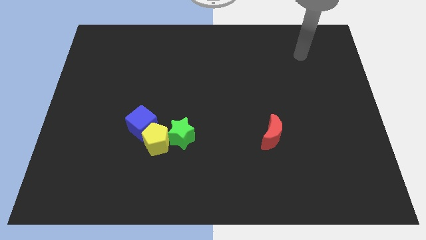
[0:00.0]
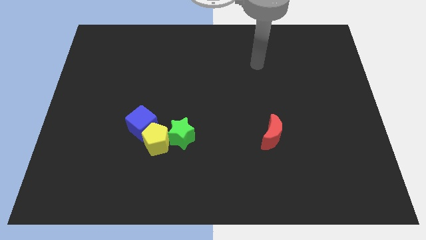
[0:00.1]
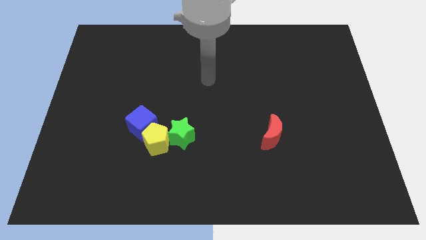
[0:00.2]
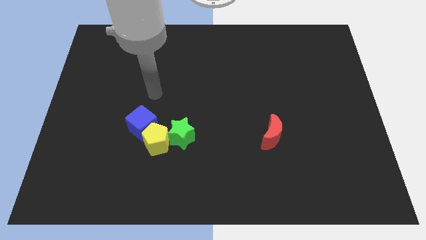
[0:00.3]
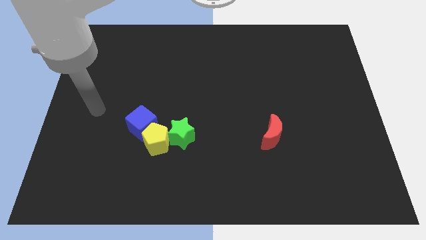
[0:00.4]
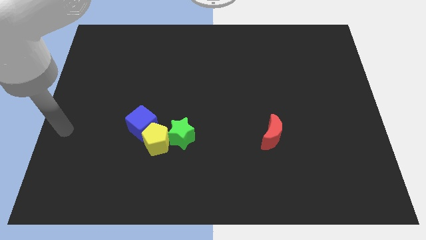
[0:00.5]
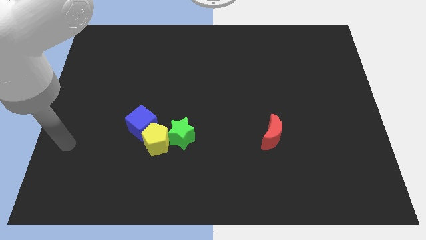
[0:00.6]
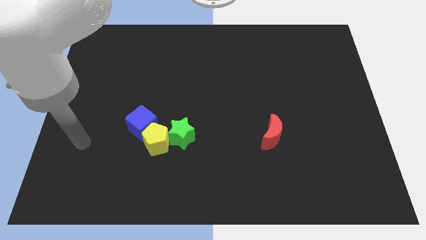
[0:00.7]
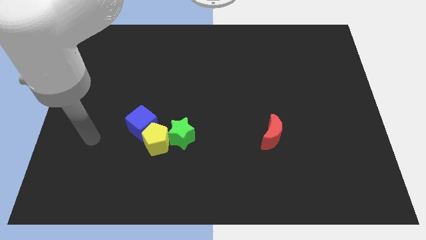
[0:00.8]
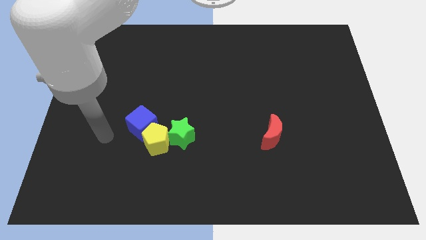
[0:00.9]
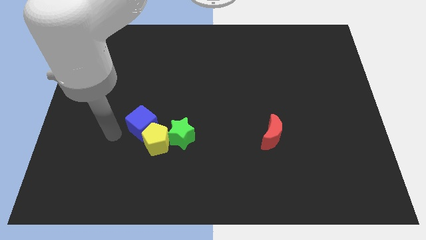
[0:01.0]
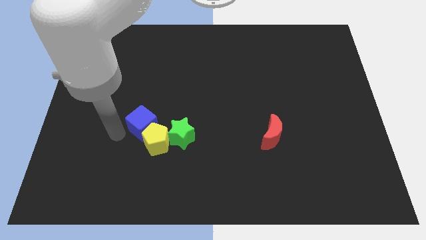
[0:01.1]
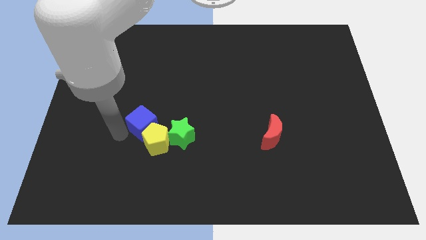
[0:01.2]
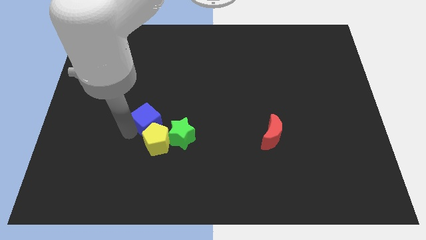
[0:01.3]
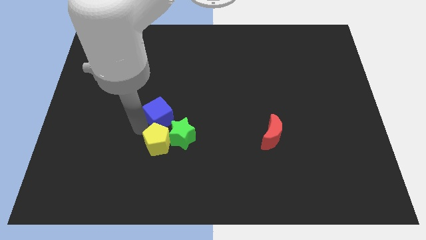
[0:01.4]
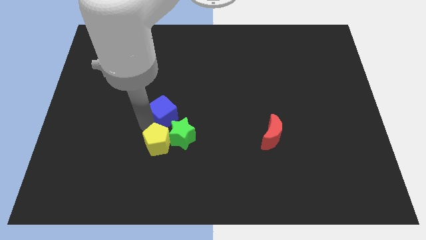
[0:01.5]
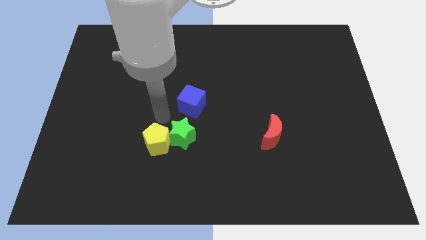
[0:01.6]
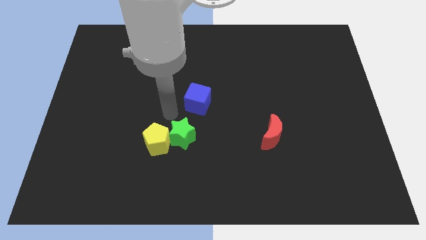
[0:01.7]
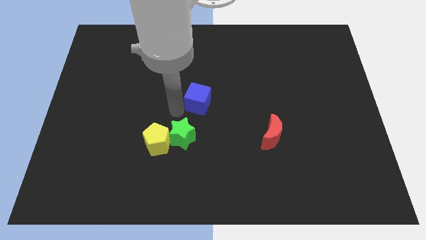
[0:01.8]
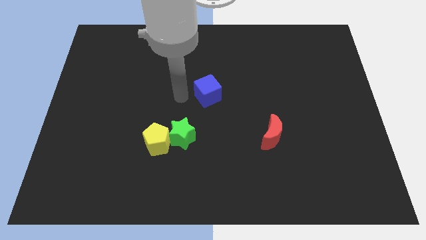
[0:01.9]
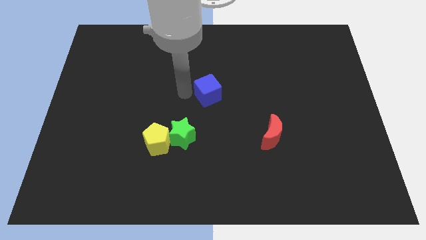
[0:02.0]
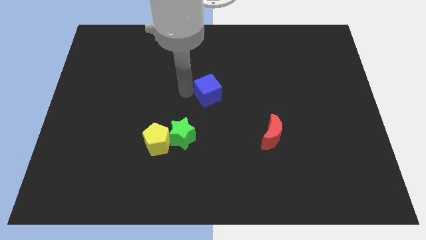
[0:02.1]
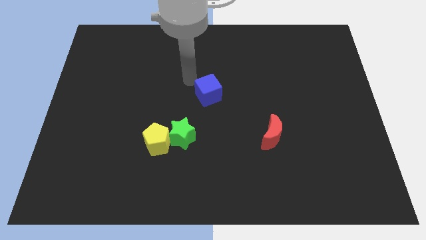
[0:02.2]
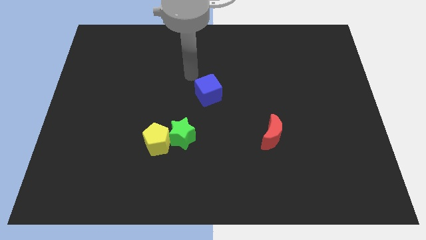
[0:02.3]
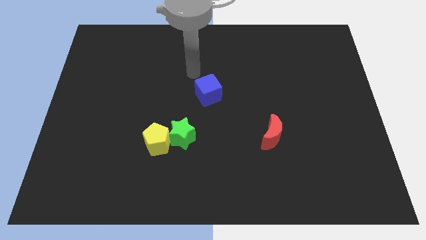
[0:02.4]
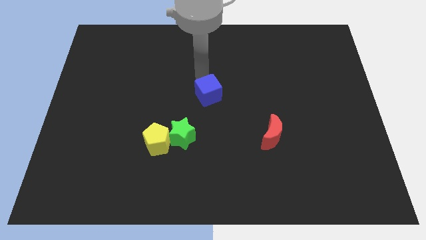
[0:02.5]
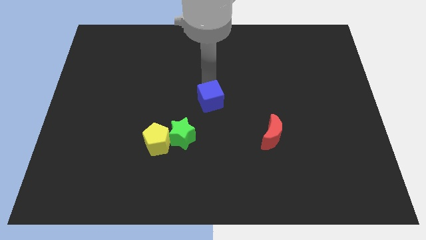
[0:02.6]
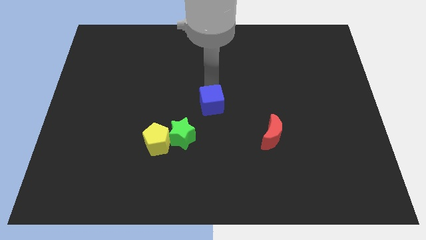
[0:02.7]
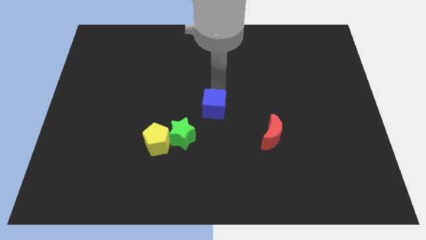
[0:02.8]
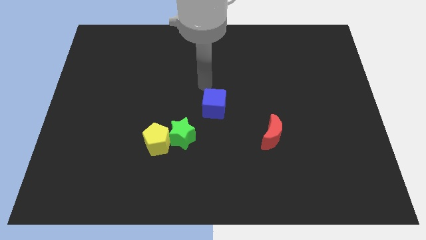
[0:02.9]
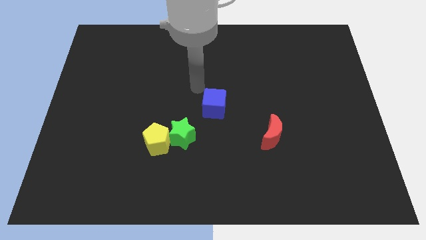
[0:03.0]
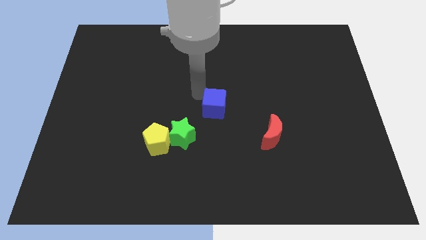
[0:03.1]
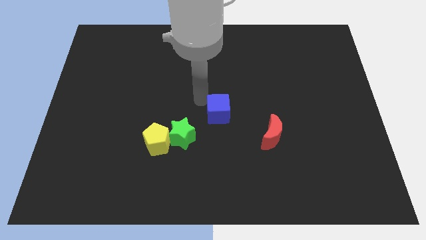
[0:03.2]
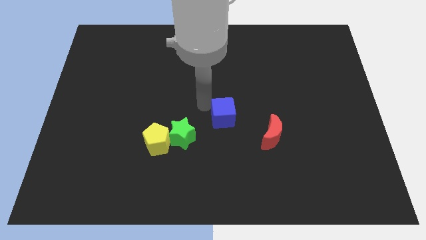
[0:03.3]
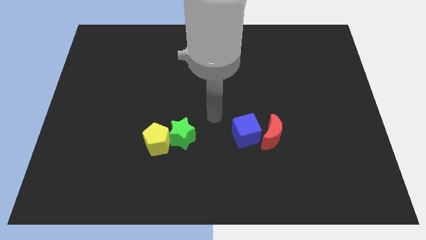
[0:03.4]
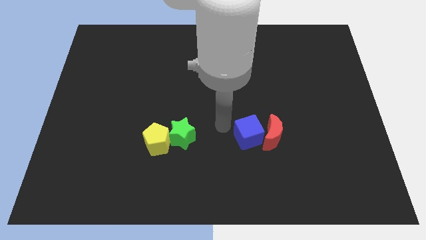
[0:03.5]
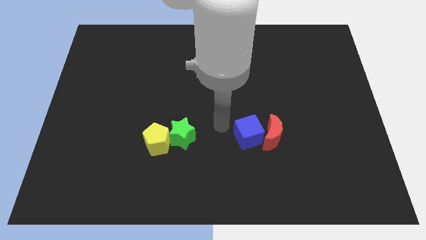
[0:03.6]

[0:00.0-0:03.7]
push the cube close to the red block

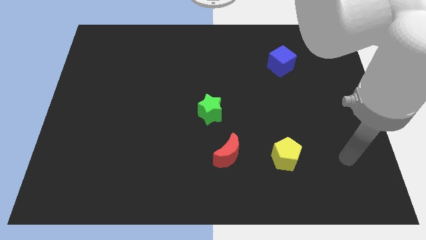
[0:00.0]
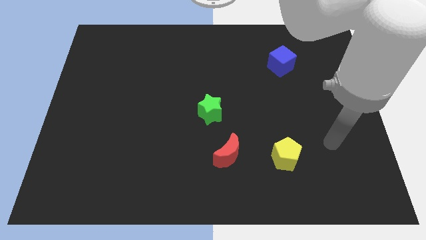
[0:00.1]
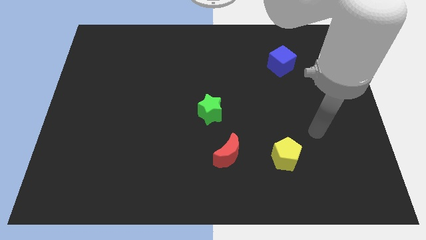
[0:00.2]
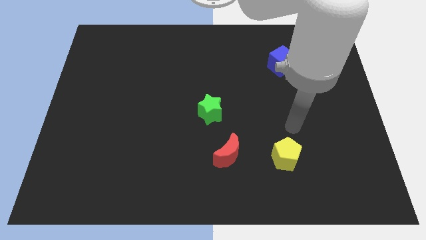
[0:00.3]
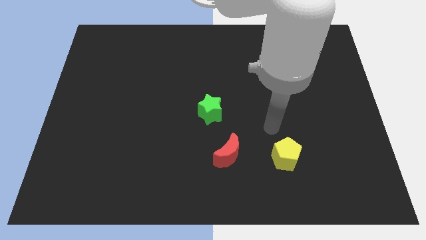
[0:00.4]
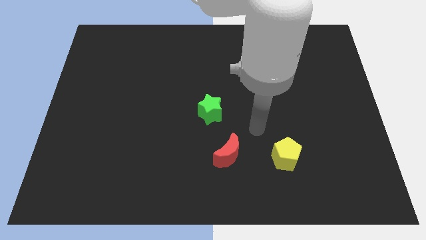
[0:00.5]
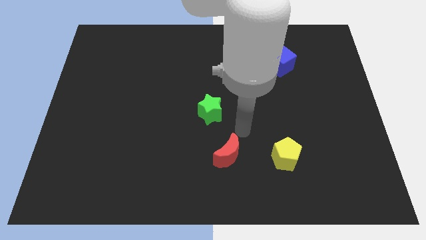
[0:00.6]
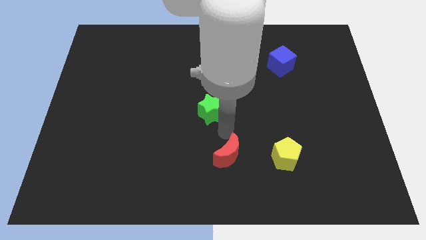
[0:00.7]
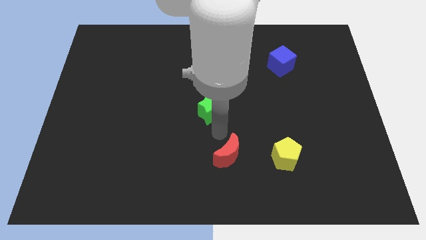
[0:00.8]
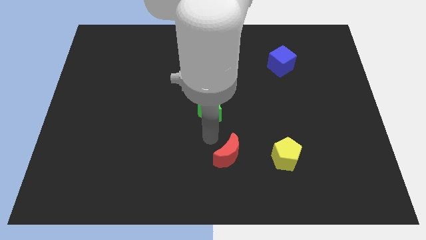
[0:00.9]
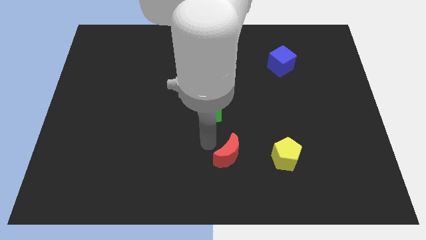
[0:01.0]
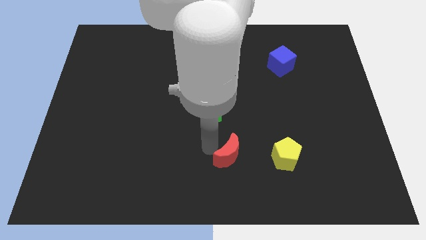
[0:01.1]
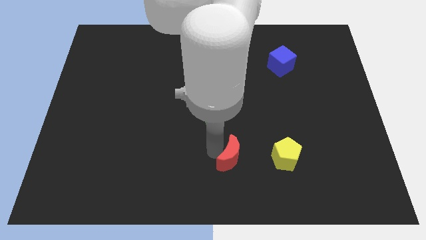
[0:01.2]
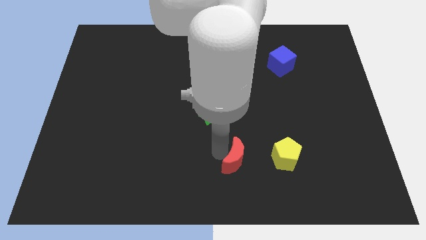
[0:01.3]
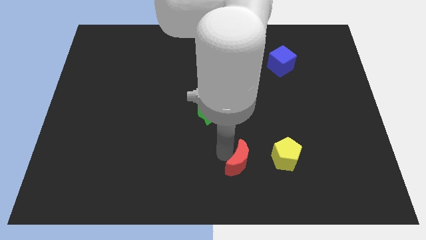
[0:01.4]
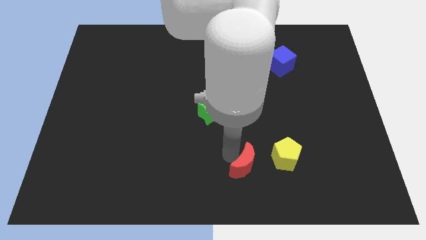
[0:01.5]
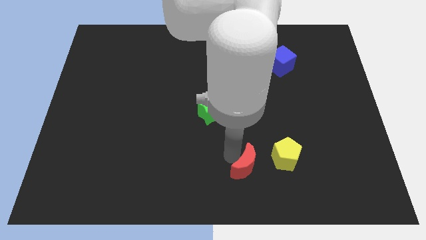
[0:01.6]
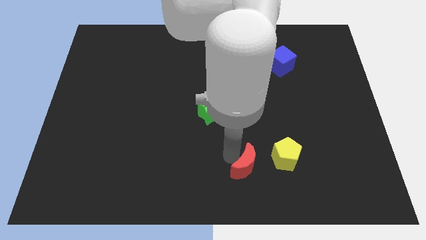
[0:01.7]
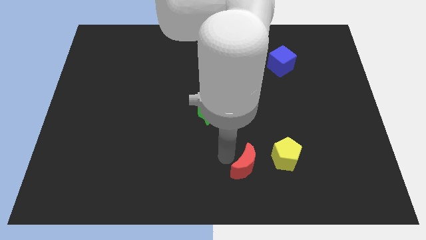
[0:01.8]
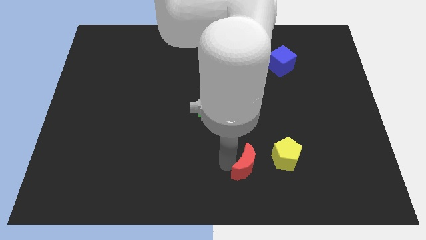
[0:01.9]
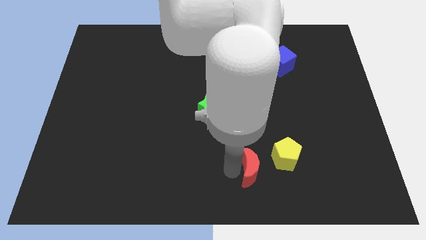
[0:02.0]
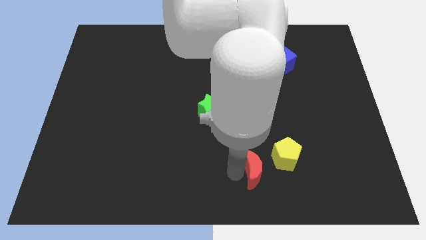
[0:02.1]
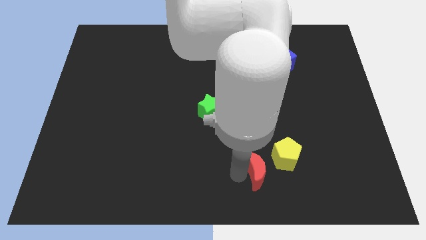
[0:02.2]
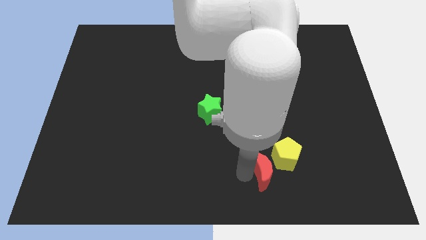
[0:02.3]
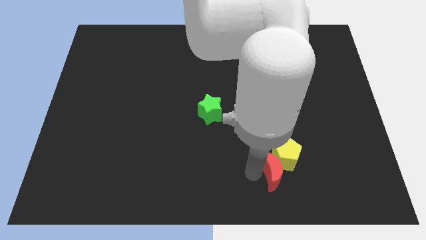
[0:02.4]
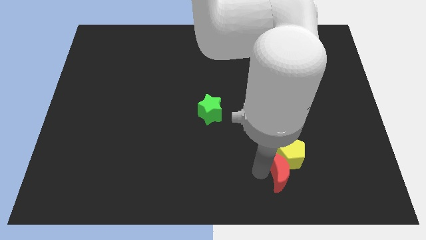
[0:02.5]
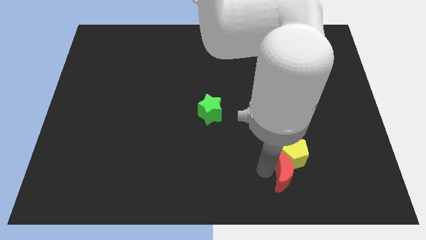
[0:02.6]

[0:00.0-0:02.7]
slide the red moon close to the yellow pentagon

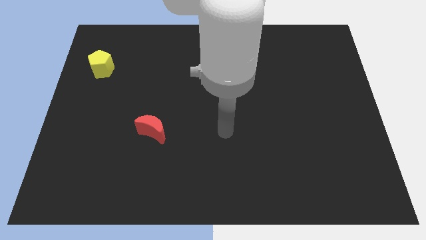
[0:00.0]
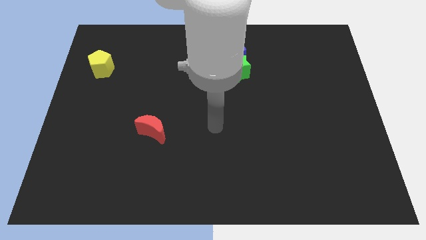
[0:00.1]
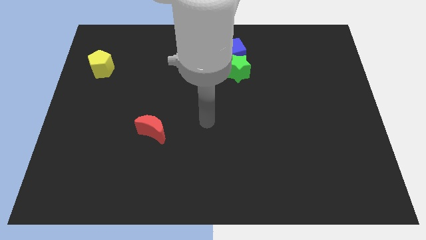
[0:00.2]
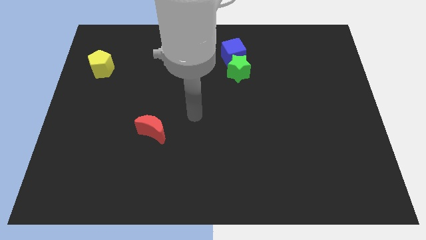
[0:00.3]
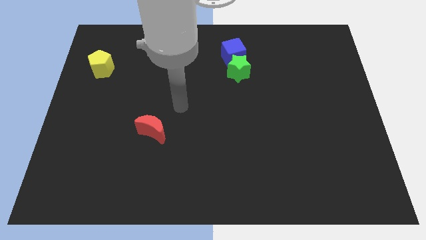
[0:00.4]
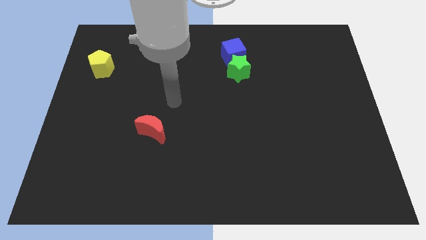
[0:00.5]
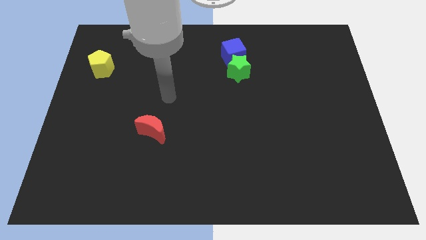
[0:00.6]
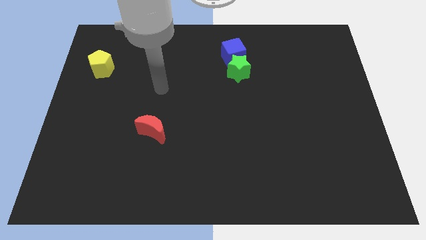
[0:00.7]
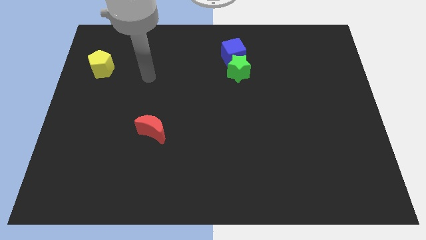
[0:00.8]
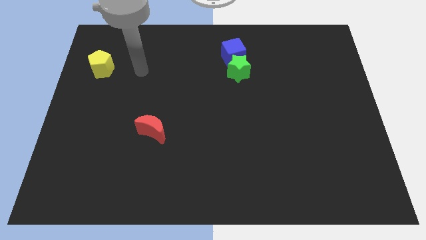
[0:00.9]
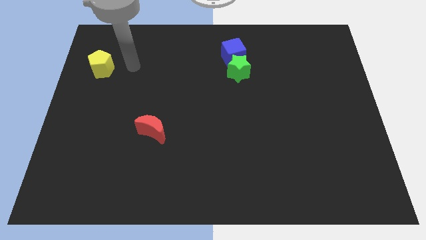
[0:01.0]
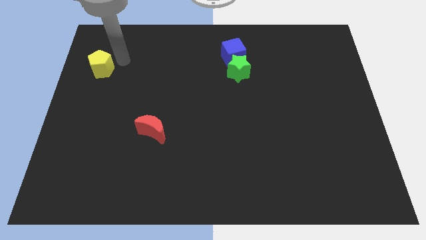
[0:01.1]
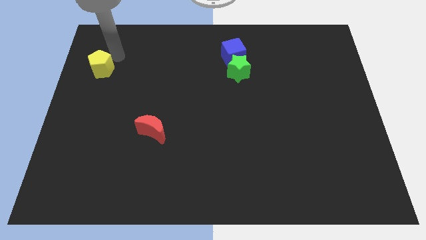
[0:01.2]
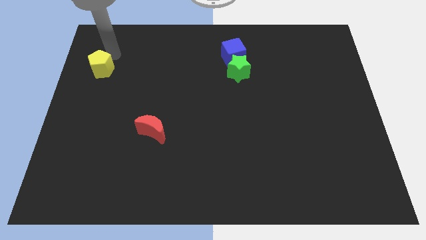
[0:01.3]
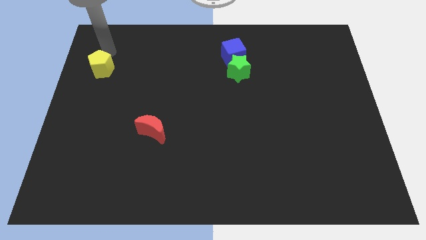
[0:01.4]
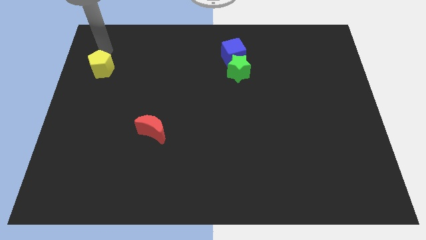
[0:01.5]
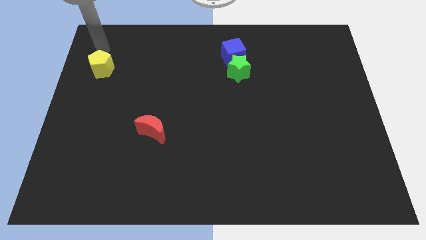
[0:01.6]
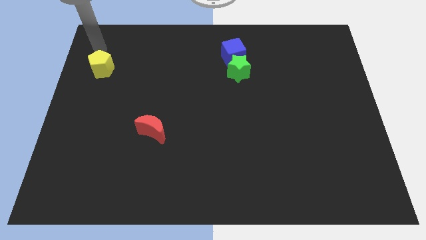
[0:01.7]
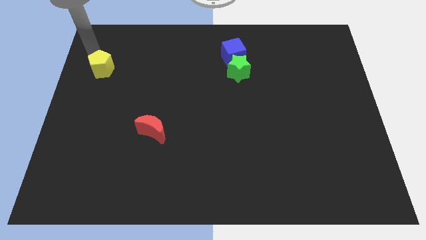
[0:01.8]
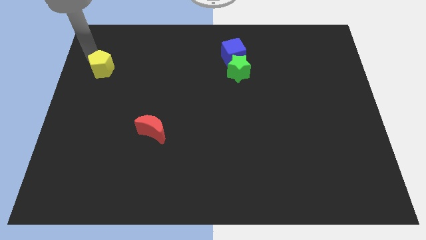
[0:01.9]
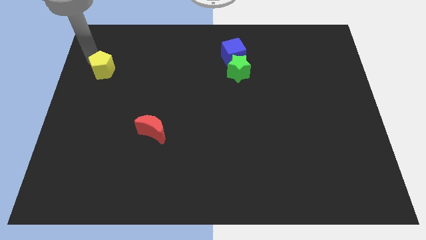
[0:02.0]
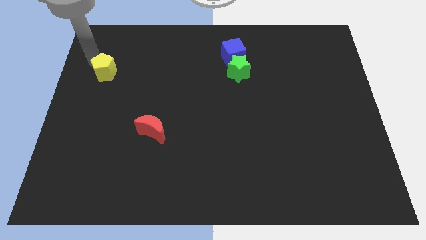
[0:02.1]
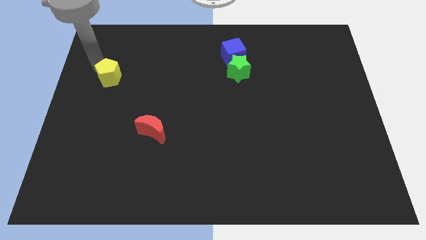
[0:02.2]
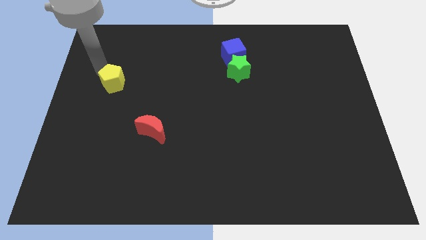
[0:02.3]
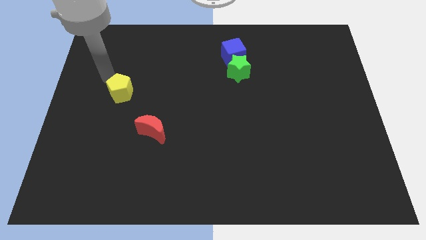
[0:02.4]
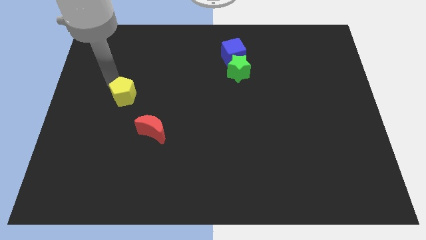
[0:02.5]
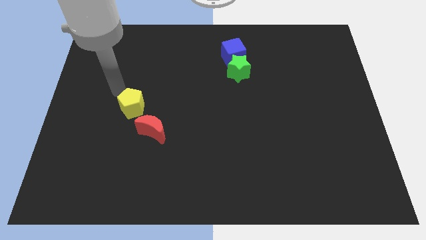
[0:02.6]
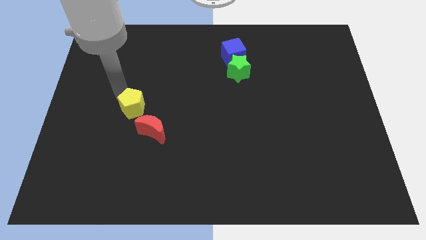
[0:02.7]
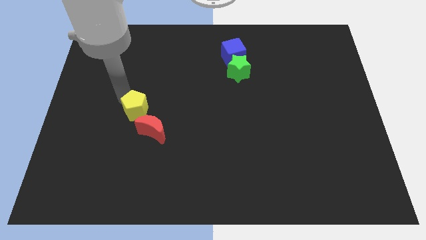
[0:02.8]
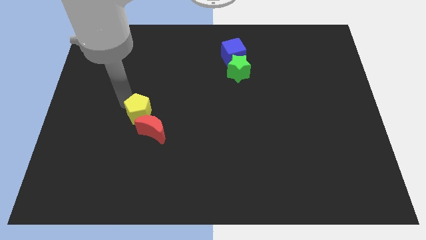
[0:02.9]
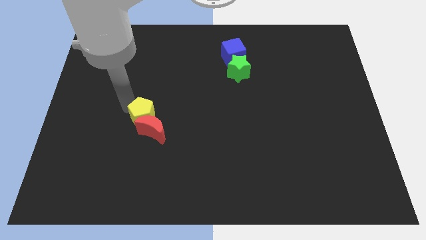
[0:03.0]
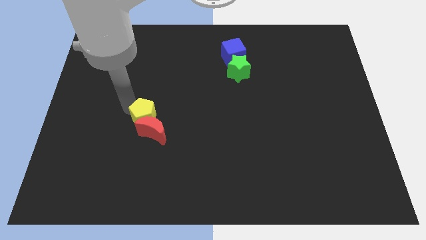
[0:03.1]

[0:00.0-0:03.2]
push the yellow block towards the red block
